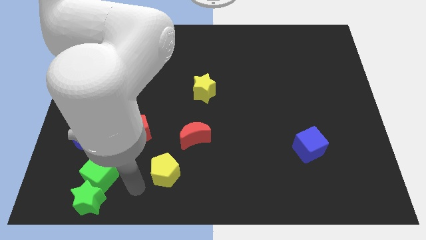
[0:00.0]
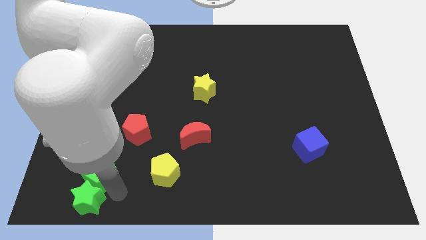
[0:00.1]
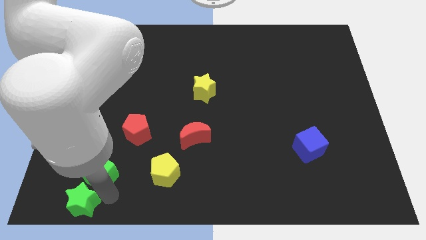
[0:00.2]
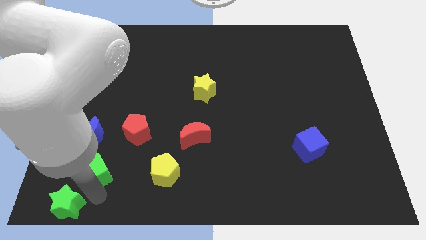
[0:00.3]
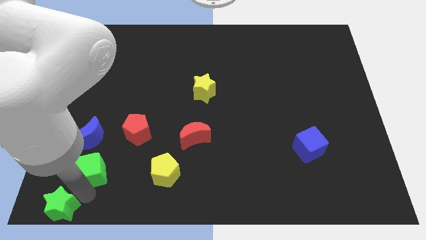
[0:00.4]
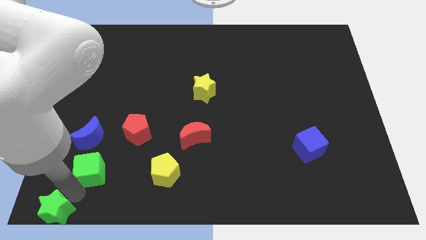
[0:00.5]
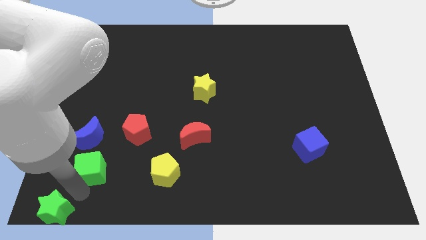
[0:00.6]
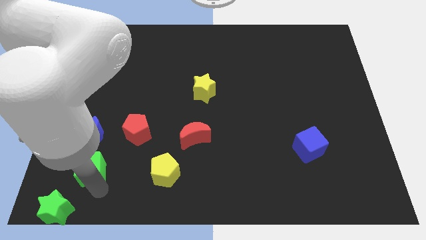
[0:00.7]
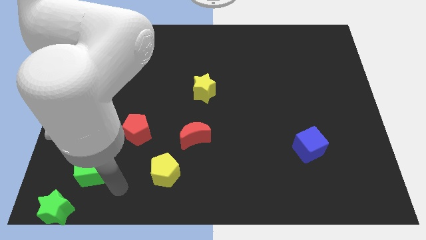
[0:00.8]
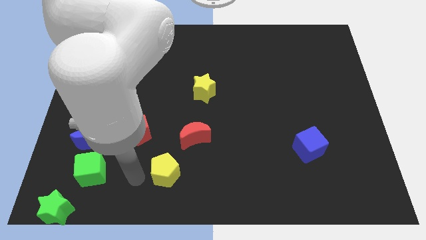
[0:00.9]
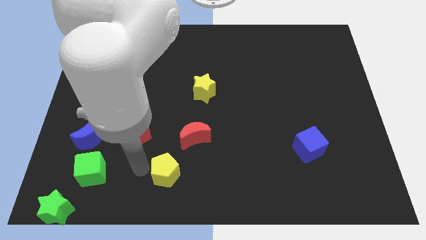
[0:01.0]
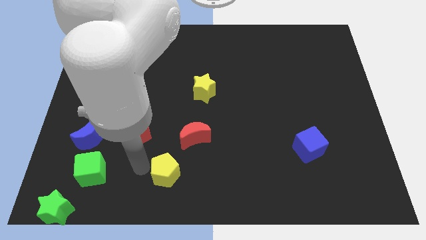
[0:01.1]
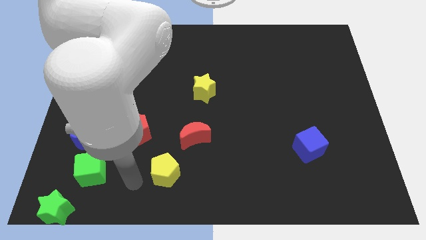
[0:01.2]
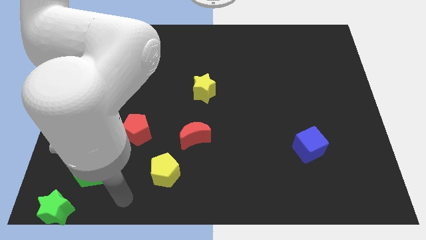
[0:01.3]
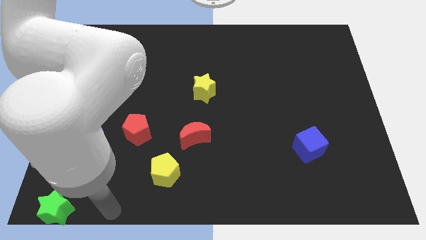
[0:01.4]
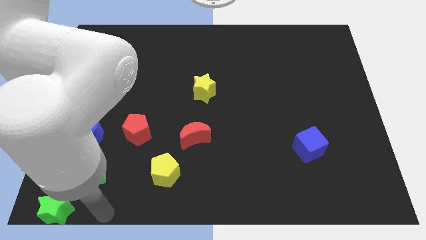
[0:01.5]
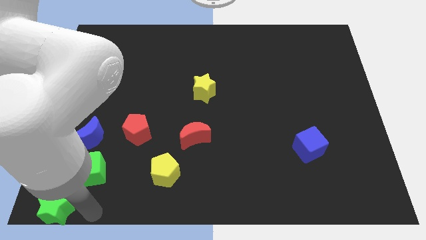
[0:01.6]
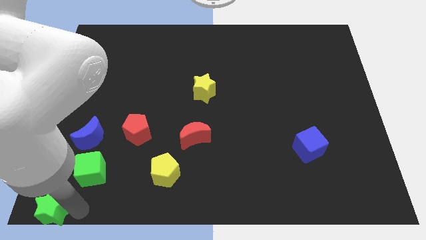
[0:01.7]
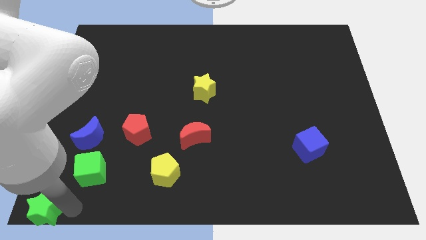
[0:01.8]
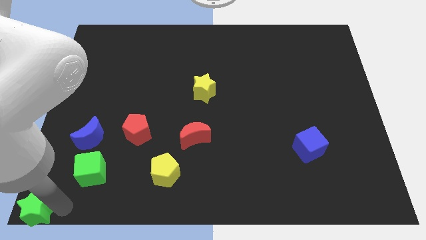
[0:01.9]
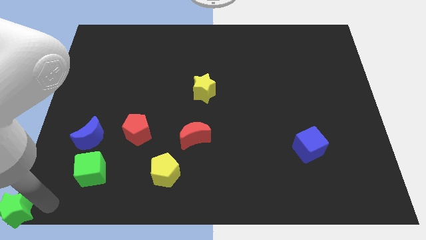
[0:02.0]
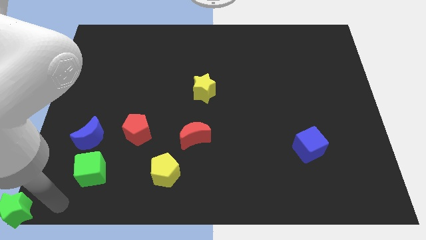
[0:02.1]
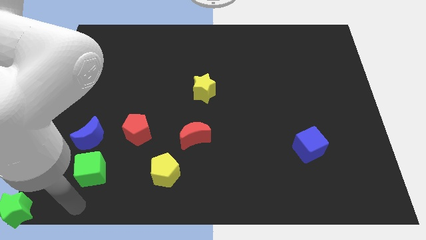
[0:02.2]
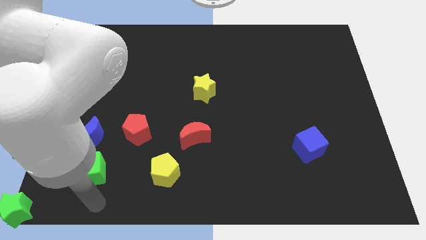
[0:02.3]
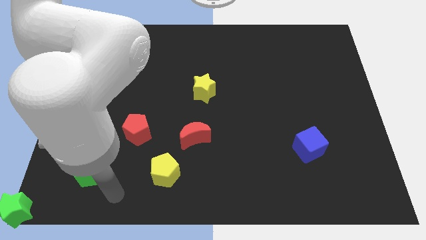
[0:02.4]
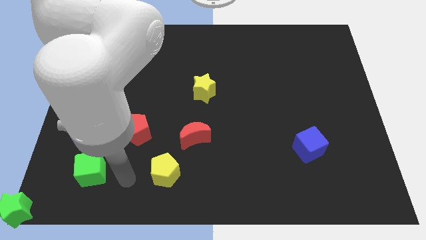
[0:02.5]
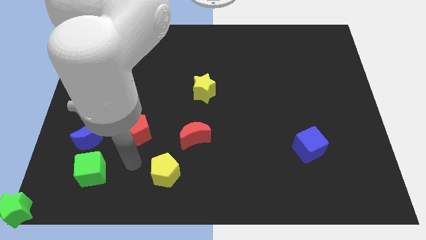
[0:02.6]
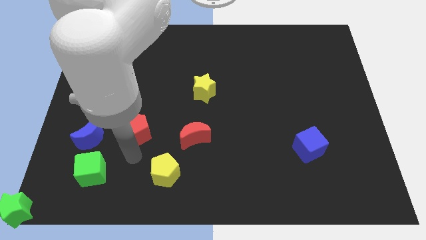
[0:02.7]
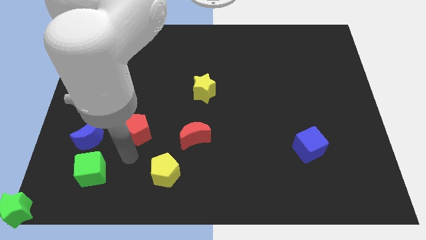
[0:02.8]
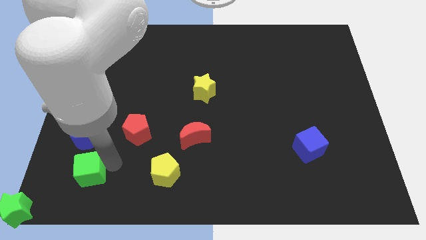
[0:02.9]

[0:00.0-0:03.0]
place the green star to the bottom left corner

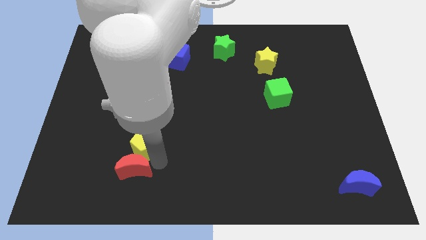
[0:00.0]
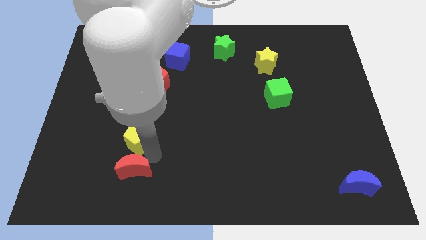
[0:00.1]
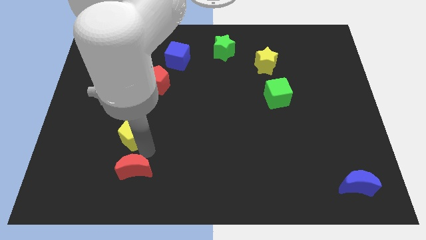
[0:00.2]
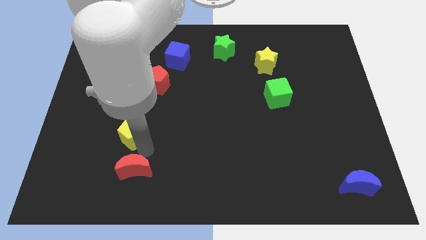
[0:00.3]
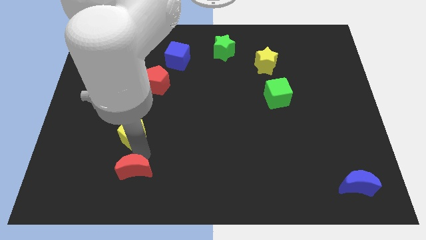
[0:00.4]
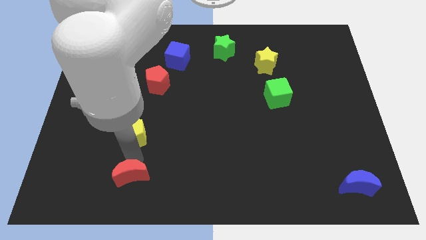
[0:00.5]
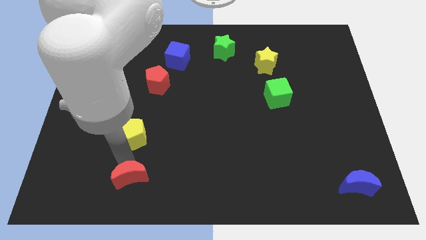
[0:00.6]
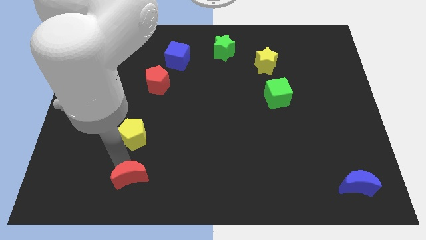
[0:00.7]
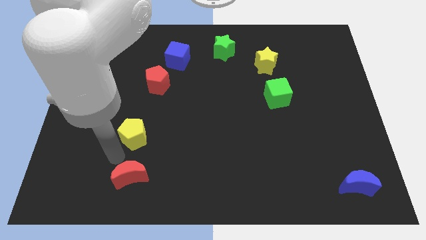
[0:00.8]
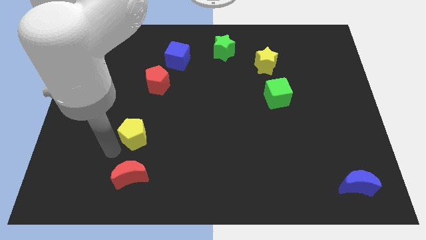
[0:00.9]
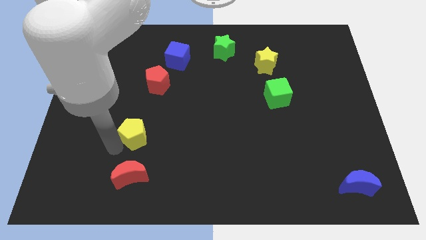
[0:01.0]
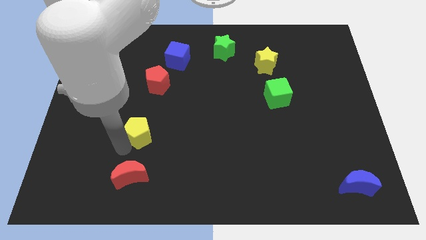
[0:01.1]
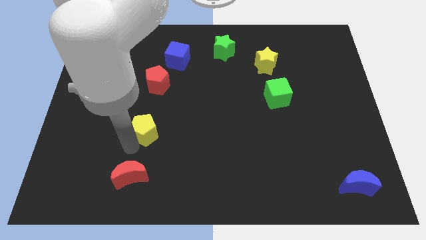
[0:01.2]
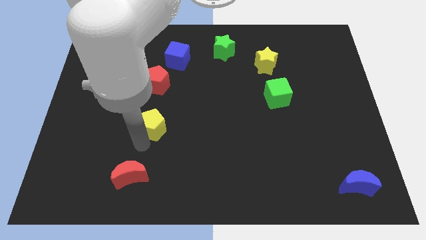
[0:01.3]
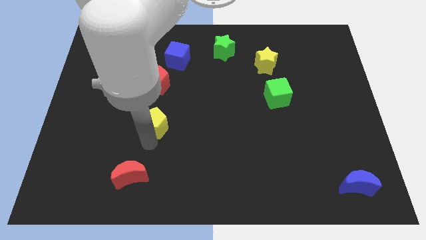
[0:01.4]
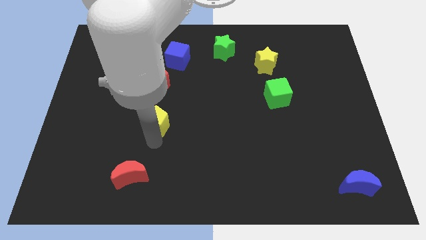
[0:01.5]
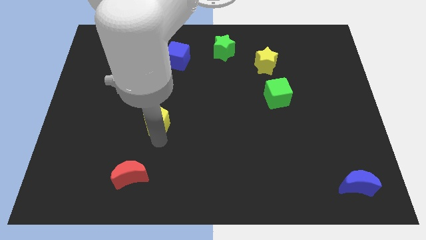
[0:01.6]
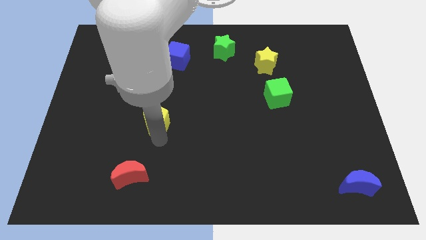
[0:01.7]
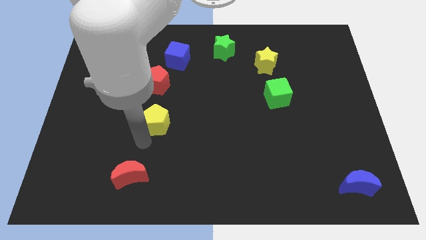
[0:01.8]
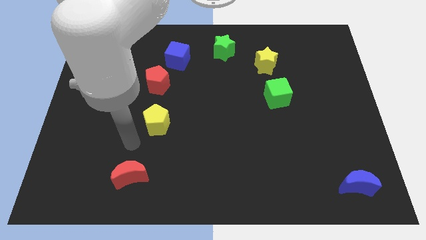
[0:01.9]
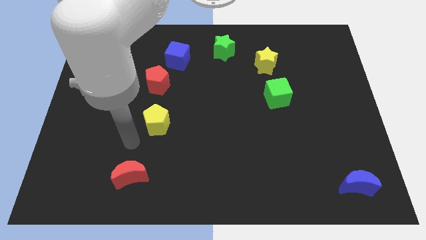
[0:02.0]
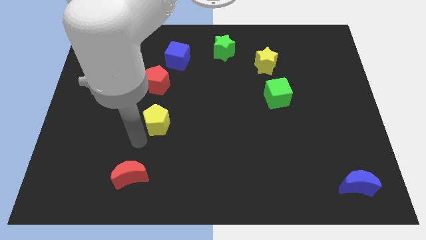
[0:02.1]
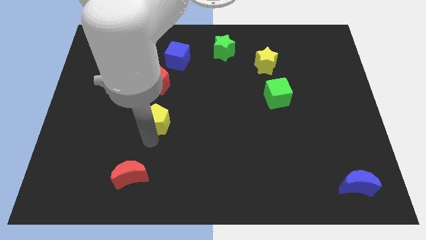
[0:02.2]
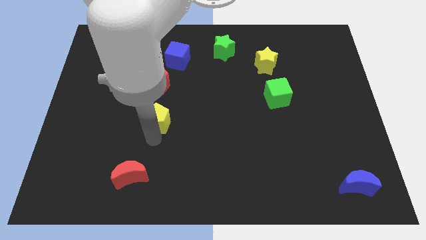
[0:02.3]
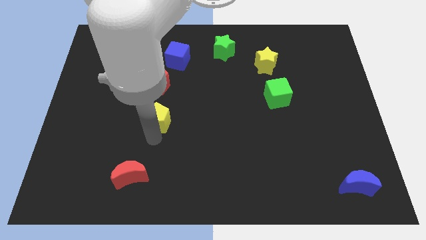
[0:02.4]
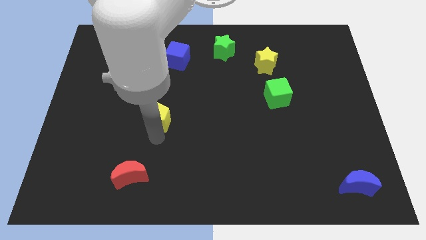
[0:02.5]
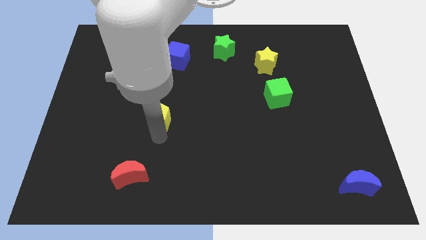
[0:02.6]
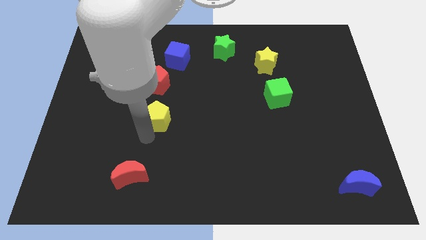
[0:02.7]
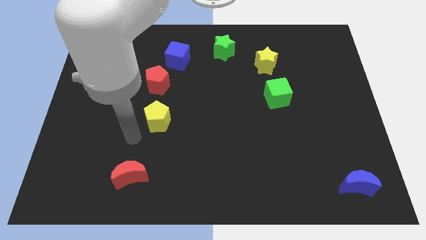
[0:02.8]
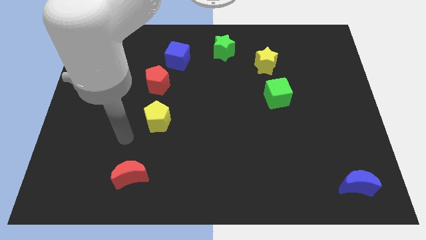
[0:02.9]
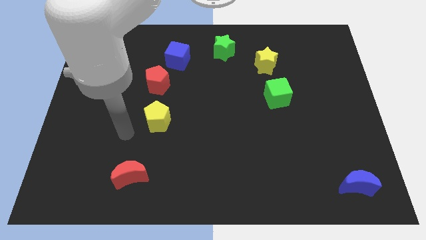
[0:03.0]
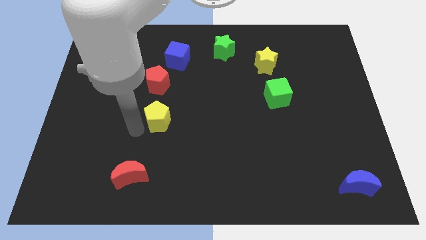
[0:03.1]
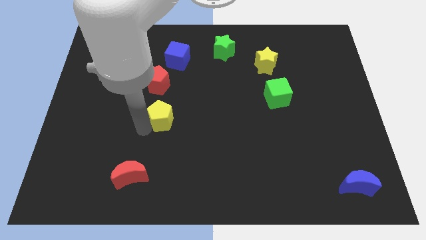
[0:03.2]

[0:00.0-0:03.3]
push the yellow pentagon below the red pentagon

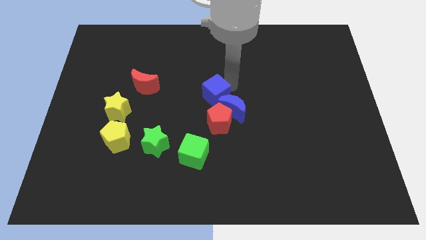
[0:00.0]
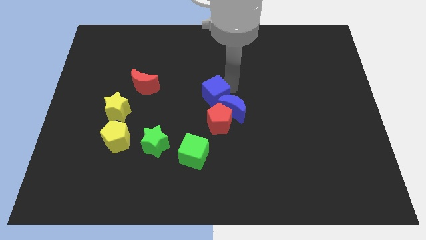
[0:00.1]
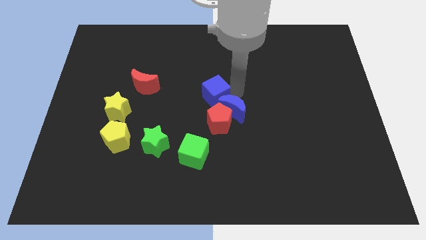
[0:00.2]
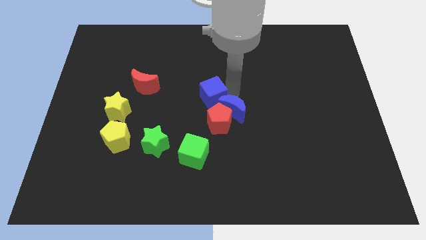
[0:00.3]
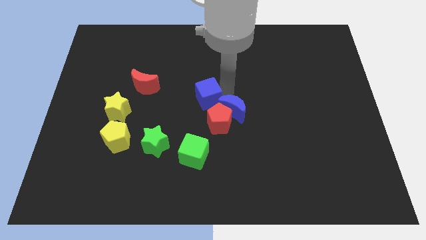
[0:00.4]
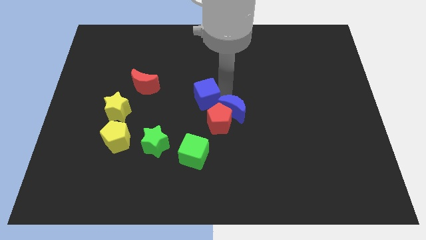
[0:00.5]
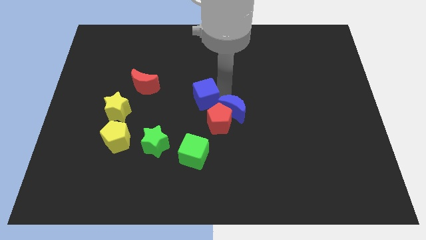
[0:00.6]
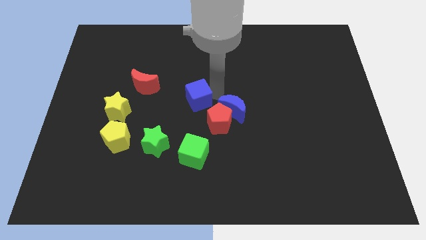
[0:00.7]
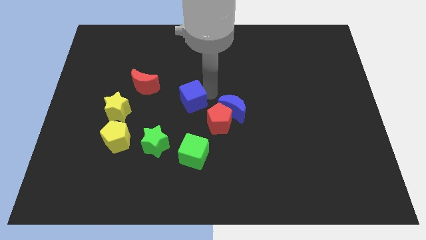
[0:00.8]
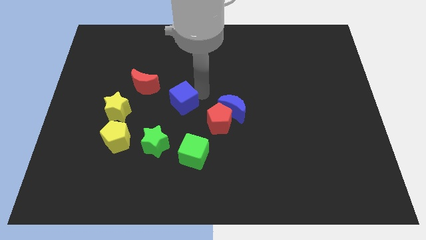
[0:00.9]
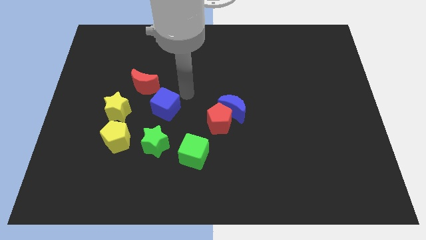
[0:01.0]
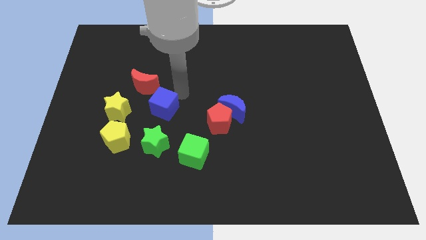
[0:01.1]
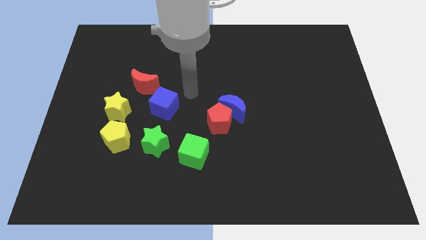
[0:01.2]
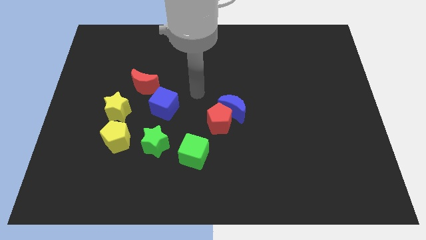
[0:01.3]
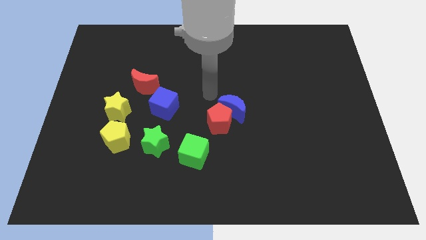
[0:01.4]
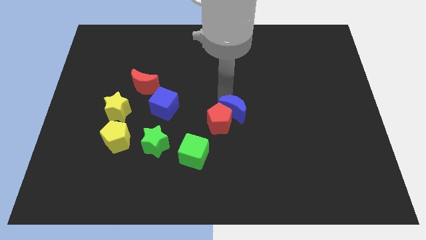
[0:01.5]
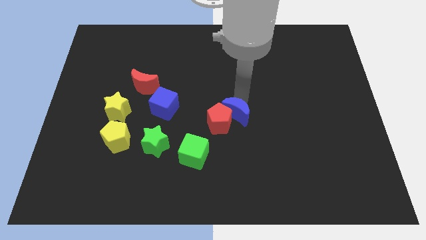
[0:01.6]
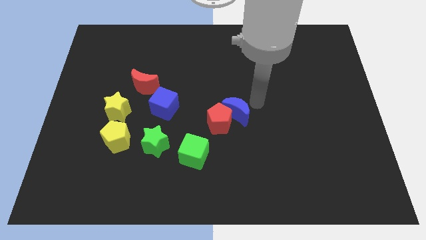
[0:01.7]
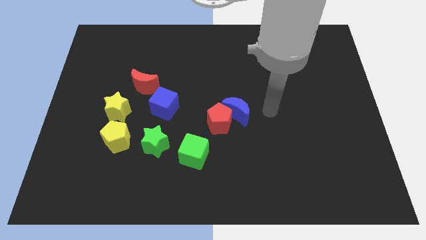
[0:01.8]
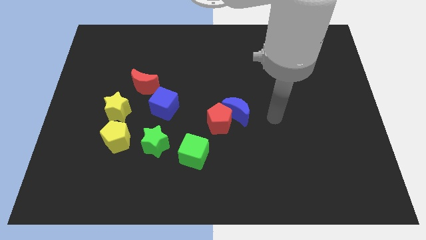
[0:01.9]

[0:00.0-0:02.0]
place the blue cube at the bottom right of the red crescent

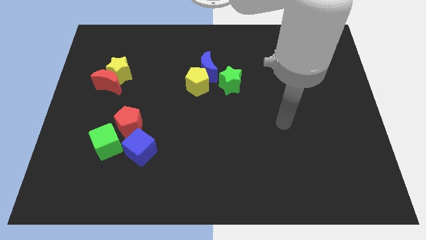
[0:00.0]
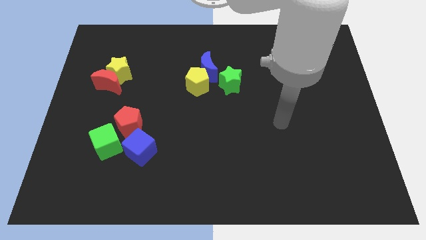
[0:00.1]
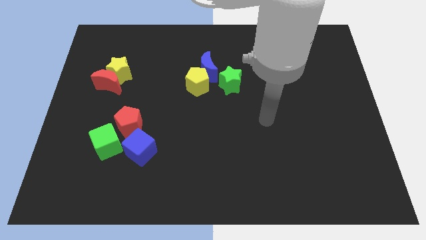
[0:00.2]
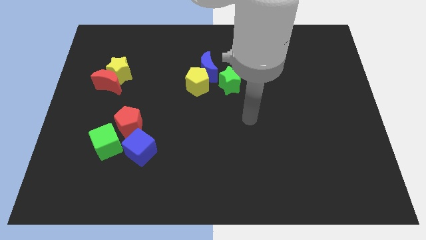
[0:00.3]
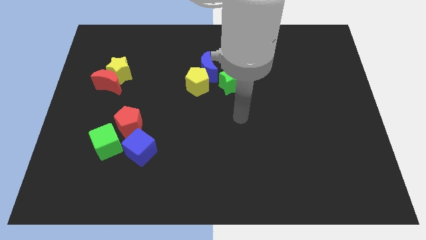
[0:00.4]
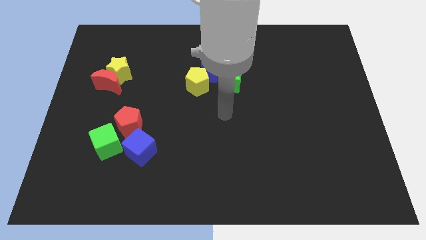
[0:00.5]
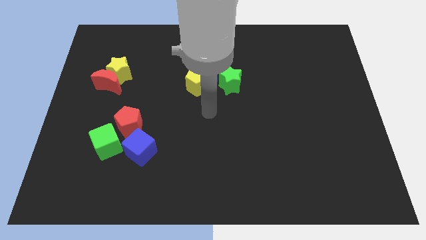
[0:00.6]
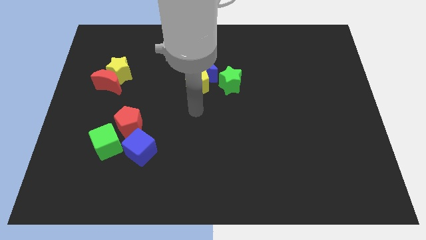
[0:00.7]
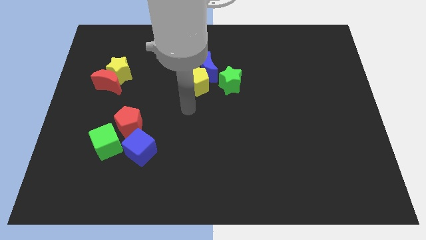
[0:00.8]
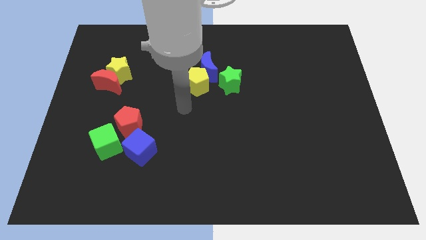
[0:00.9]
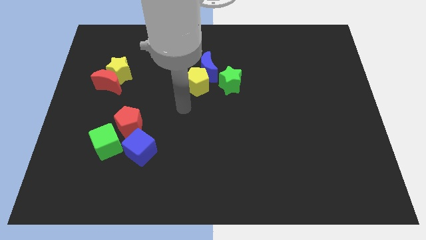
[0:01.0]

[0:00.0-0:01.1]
go near the yellow pentagon
